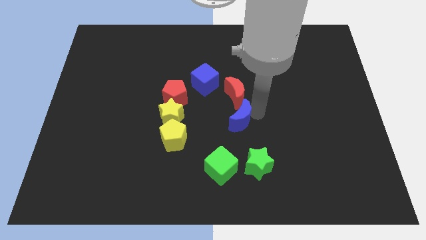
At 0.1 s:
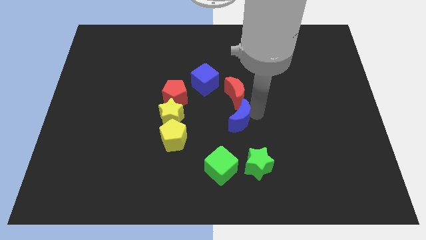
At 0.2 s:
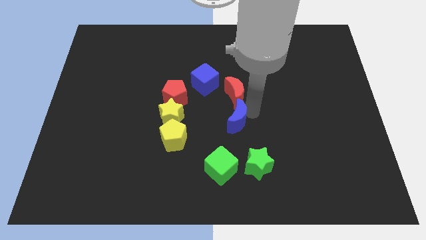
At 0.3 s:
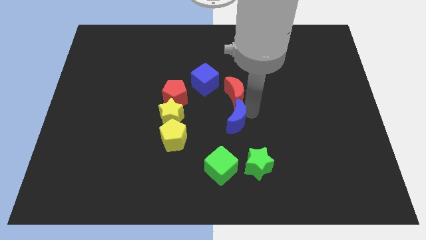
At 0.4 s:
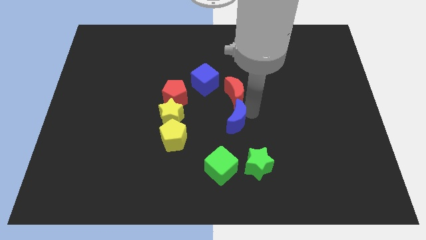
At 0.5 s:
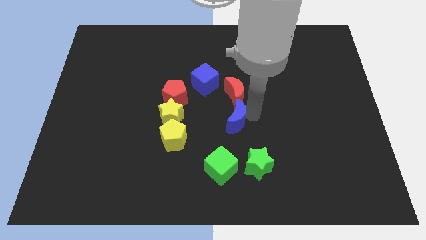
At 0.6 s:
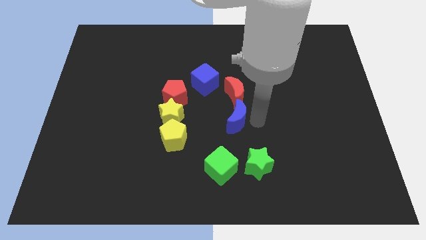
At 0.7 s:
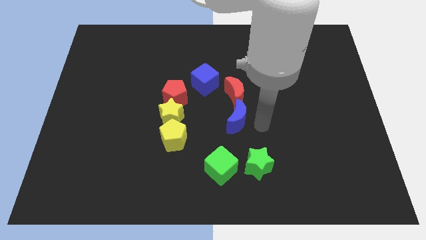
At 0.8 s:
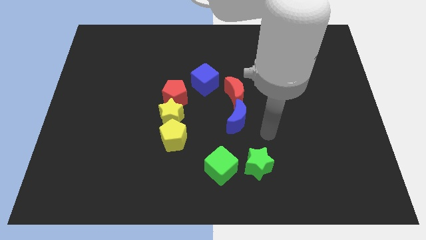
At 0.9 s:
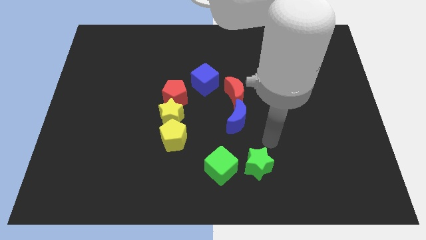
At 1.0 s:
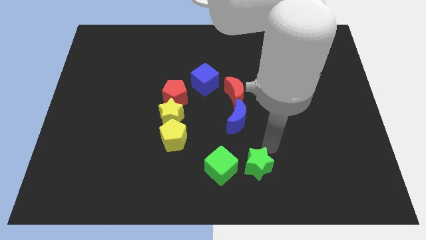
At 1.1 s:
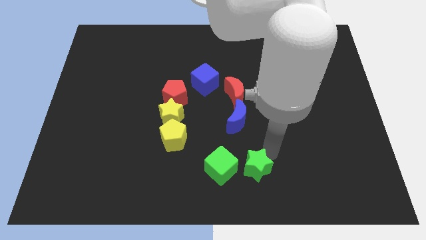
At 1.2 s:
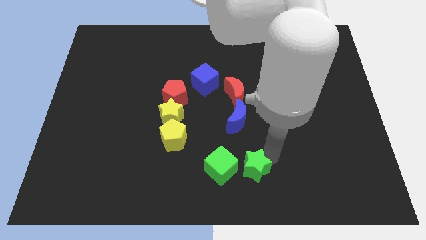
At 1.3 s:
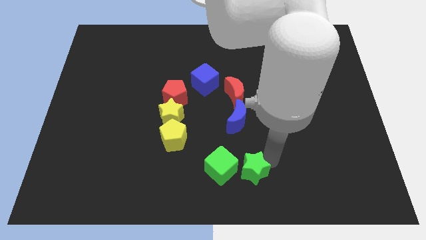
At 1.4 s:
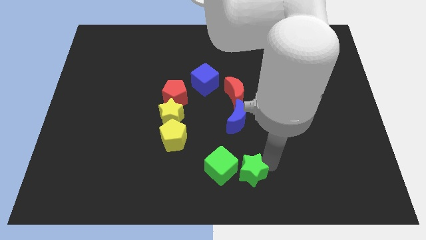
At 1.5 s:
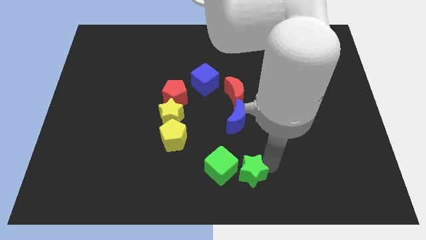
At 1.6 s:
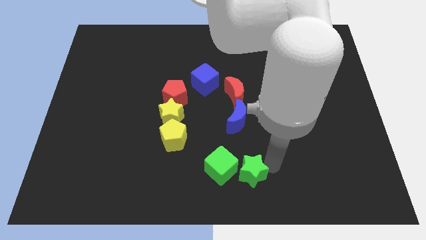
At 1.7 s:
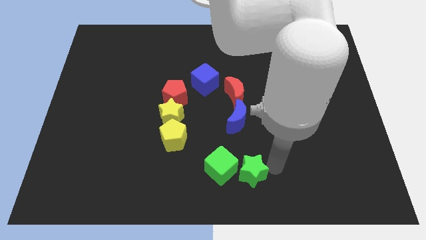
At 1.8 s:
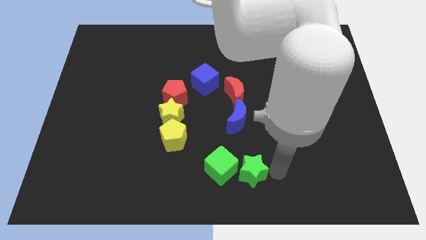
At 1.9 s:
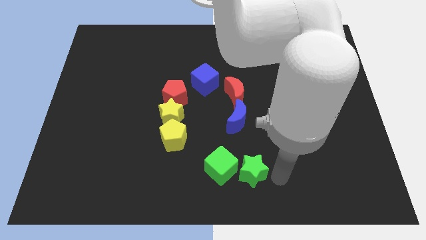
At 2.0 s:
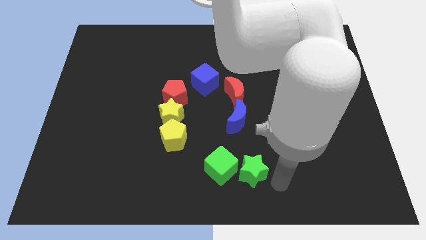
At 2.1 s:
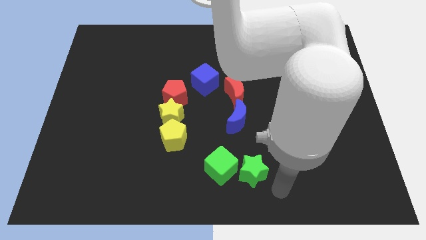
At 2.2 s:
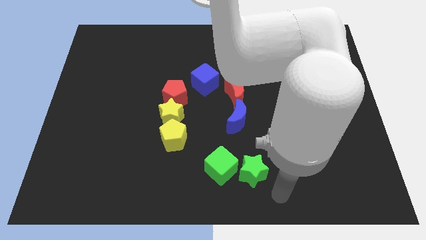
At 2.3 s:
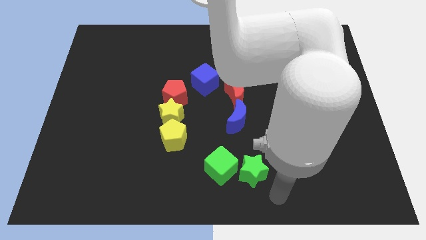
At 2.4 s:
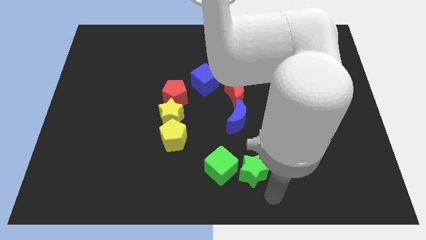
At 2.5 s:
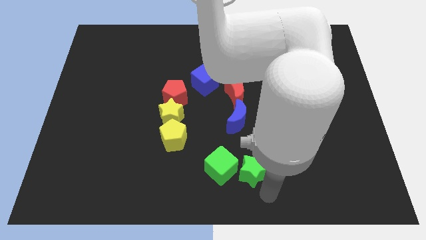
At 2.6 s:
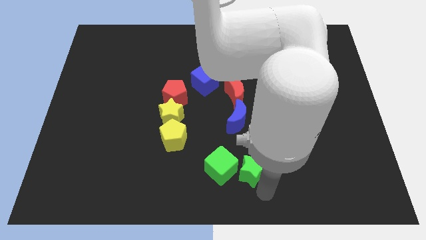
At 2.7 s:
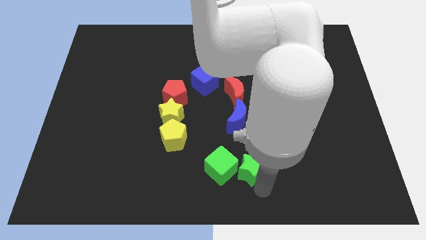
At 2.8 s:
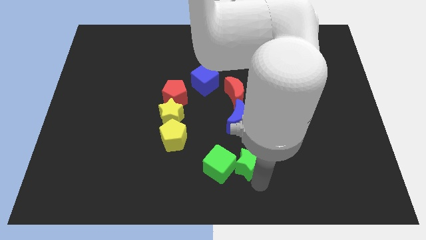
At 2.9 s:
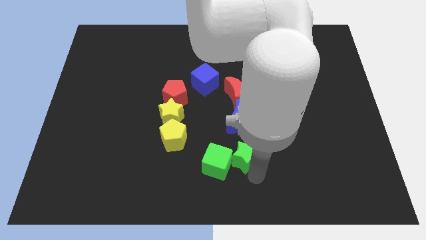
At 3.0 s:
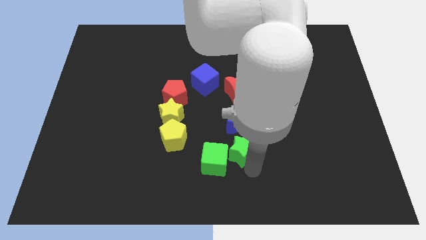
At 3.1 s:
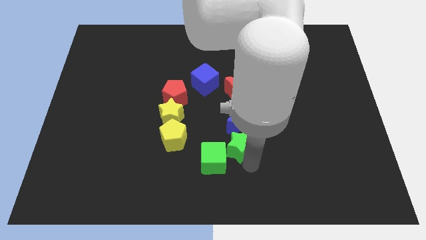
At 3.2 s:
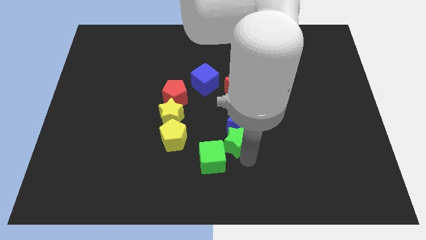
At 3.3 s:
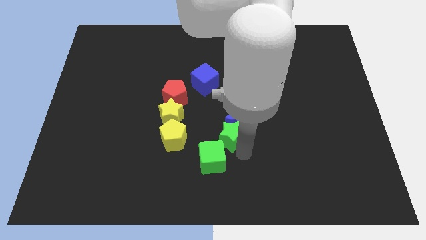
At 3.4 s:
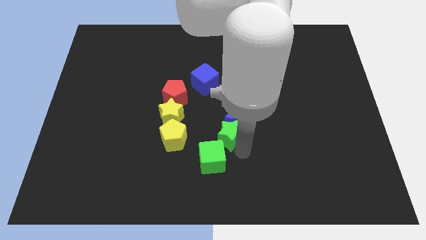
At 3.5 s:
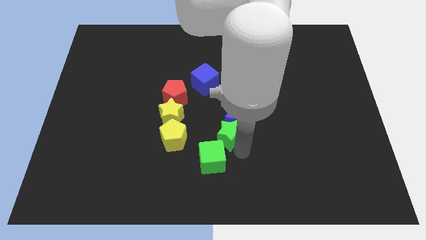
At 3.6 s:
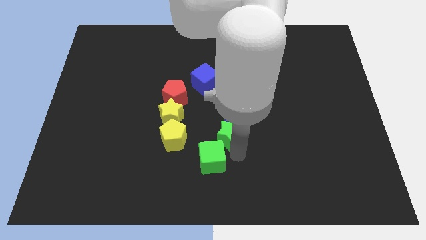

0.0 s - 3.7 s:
move the green star into the blue crescent

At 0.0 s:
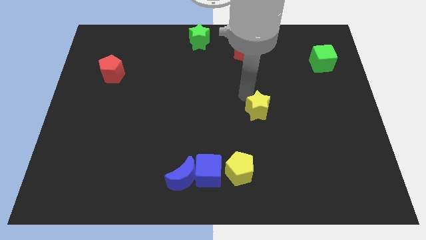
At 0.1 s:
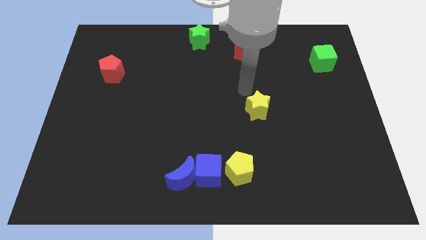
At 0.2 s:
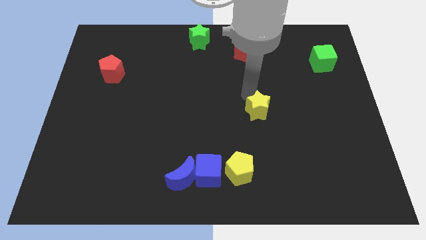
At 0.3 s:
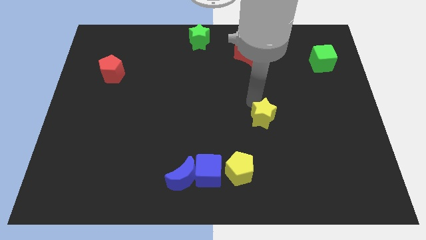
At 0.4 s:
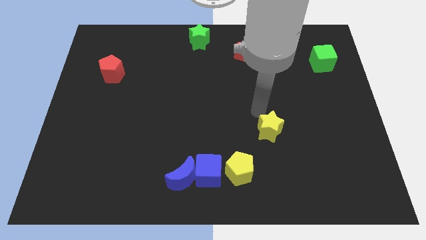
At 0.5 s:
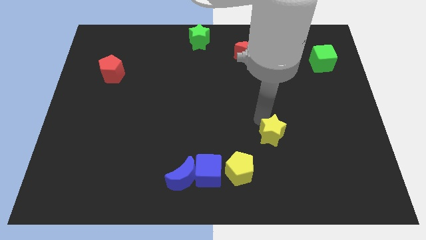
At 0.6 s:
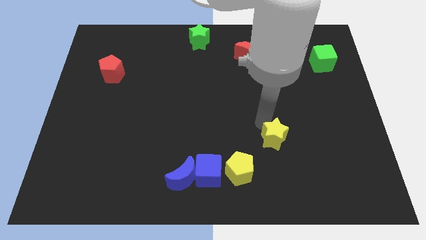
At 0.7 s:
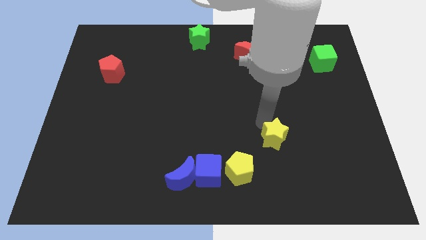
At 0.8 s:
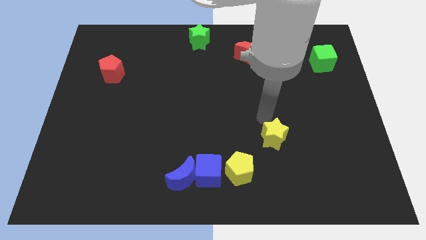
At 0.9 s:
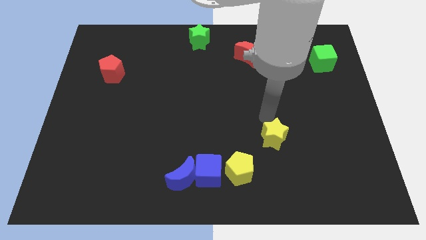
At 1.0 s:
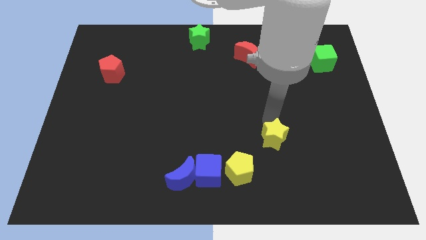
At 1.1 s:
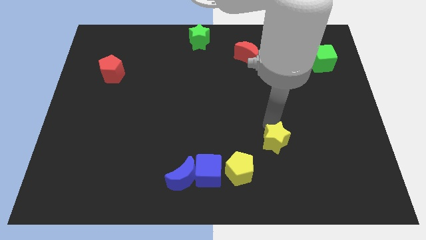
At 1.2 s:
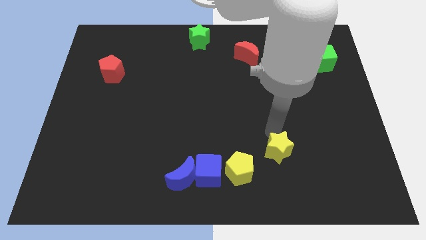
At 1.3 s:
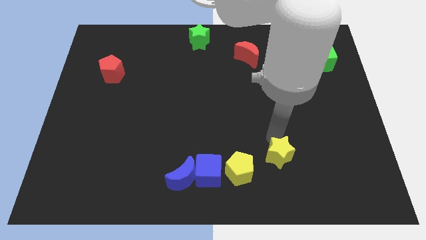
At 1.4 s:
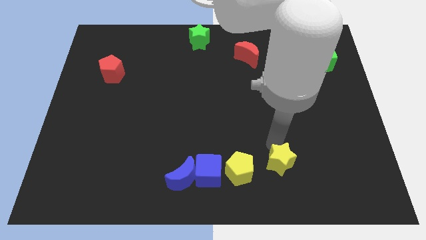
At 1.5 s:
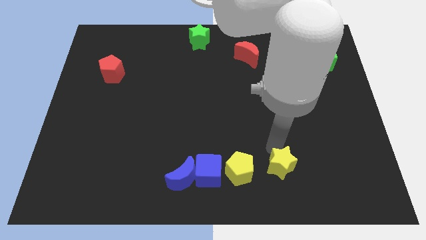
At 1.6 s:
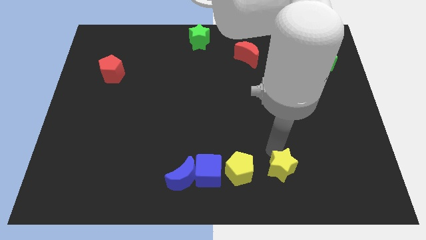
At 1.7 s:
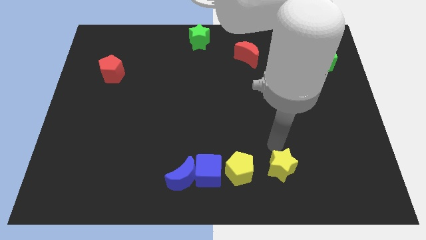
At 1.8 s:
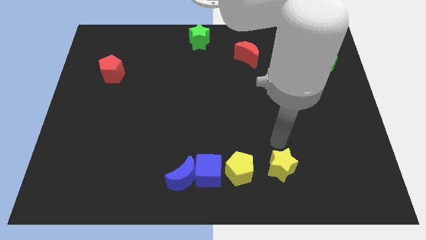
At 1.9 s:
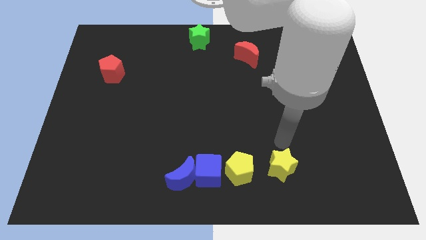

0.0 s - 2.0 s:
place the yellow star parallel to yellow pentagon

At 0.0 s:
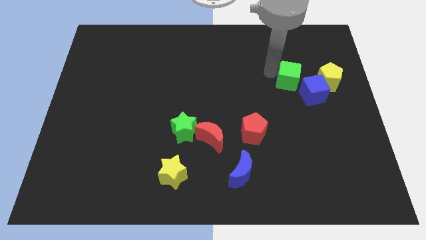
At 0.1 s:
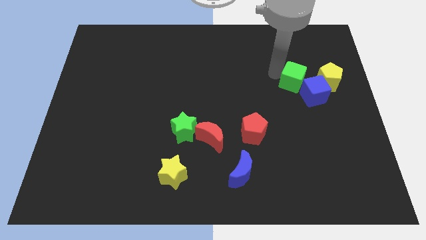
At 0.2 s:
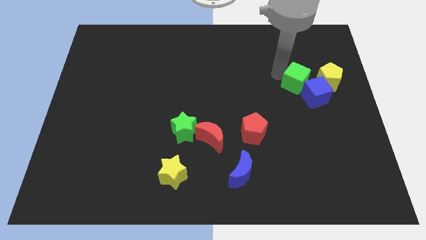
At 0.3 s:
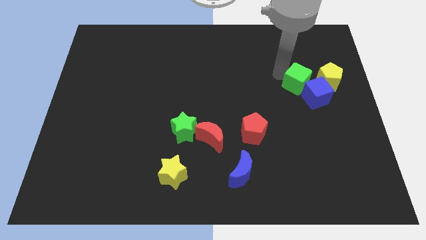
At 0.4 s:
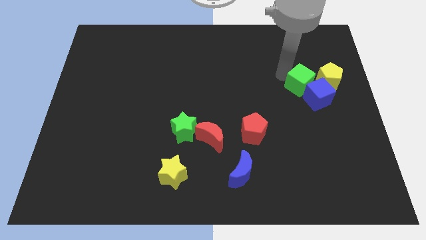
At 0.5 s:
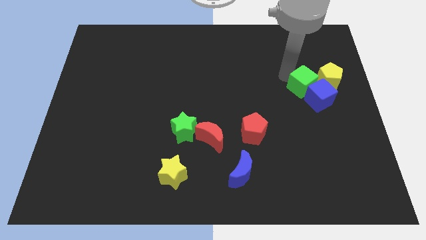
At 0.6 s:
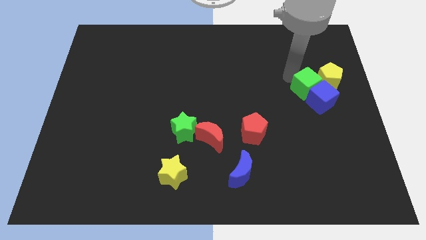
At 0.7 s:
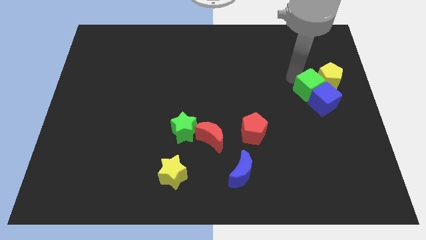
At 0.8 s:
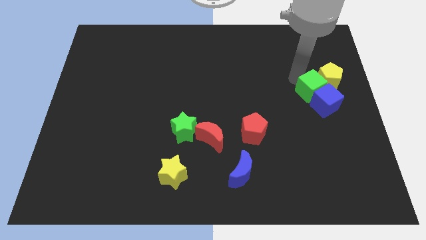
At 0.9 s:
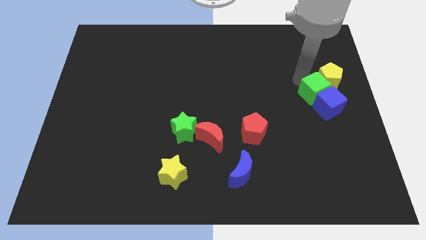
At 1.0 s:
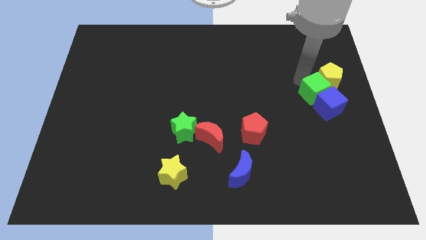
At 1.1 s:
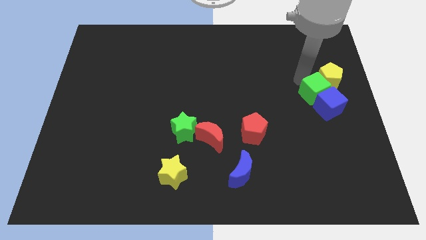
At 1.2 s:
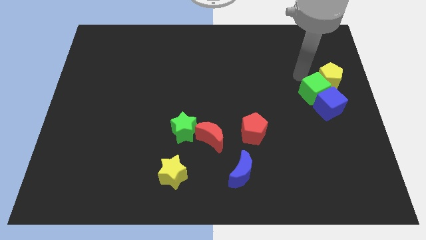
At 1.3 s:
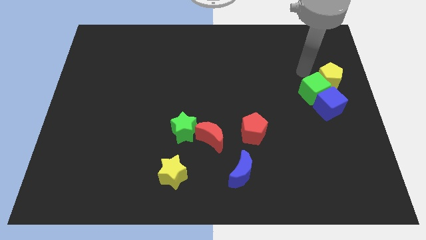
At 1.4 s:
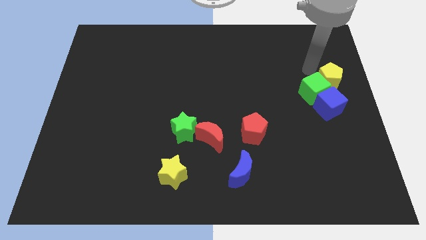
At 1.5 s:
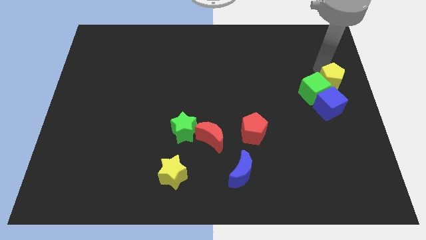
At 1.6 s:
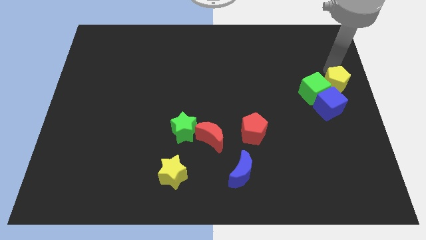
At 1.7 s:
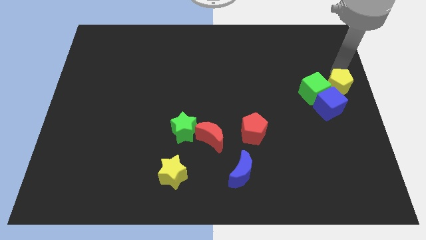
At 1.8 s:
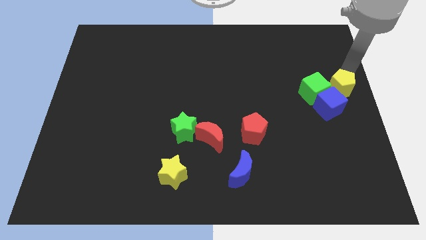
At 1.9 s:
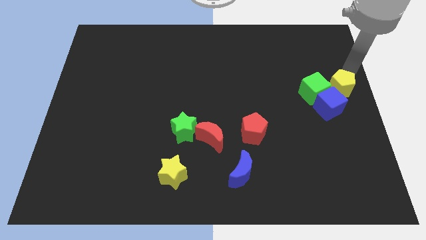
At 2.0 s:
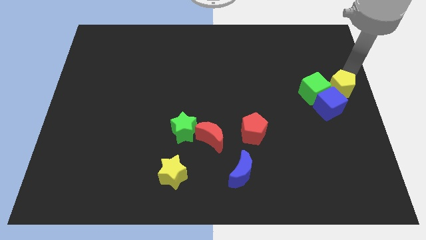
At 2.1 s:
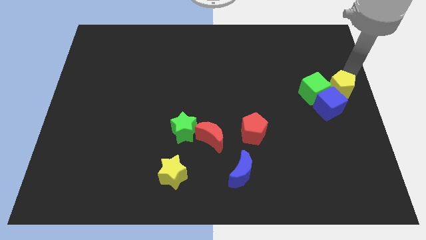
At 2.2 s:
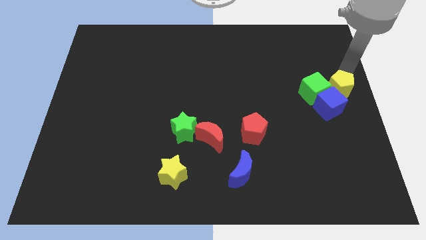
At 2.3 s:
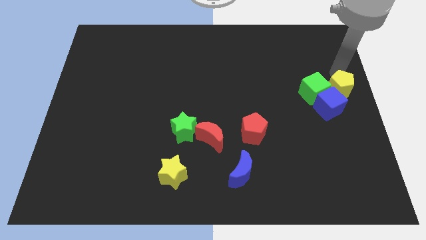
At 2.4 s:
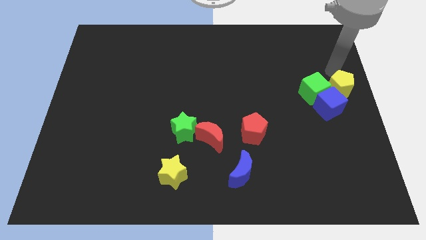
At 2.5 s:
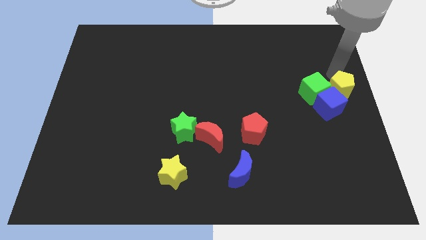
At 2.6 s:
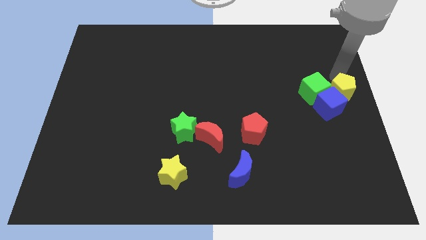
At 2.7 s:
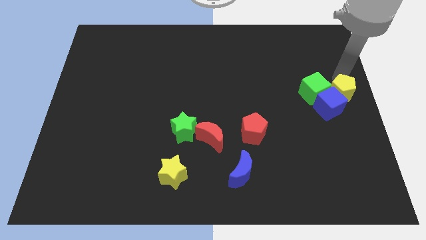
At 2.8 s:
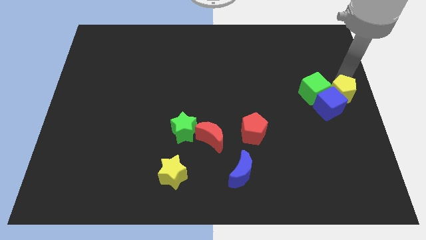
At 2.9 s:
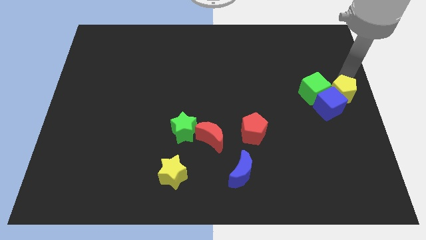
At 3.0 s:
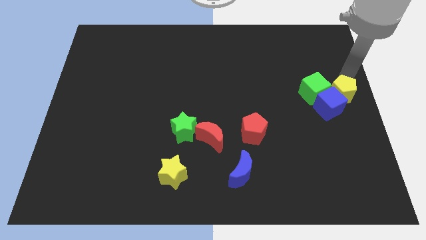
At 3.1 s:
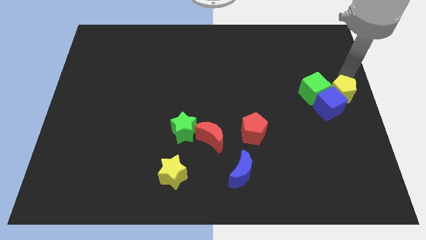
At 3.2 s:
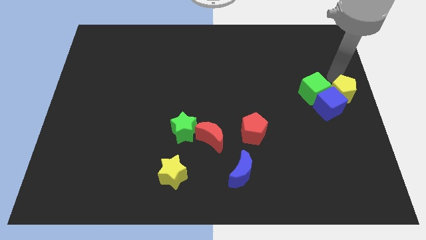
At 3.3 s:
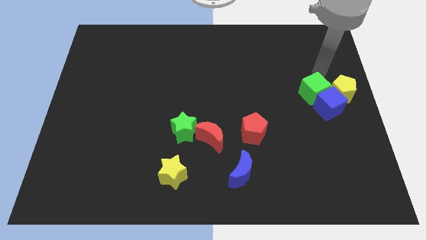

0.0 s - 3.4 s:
move green cube and yellow pentagon slightly down
